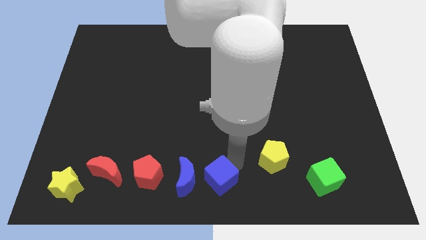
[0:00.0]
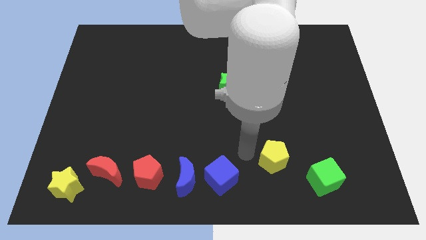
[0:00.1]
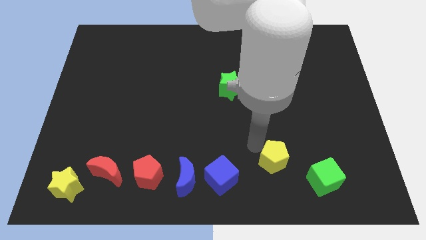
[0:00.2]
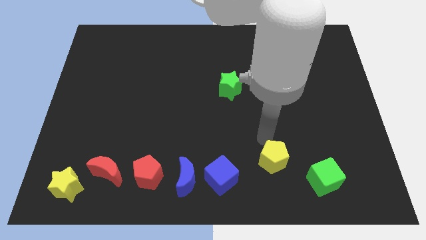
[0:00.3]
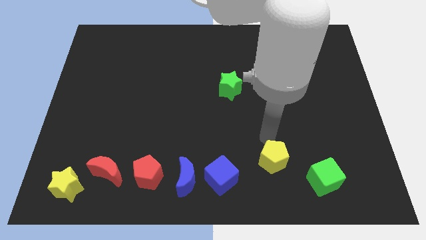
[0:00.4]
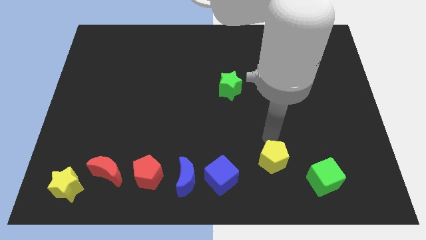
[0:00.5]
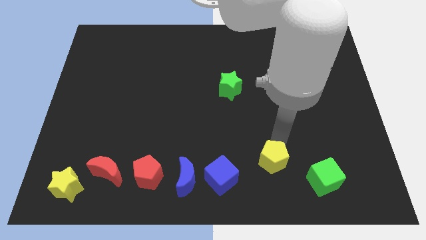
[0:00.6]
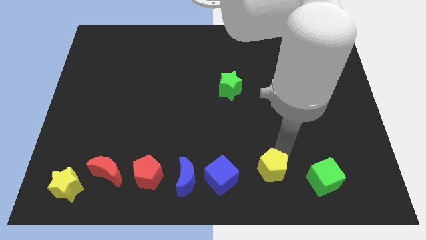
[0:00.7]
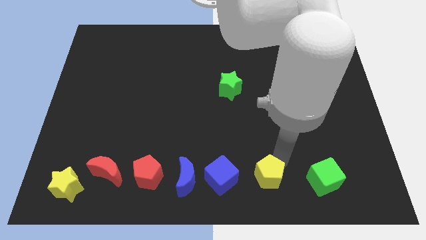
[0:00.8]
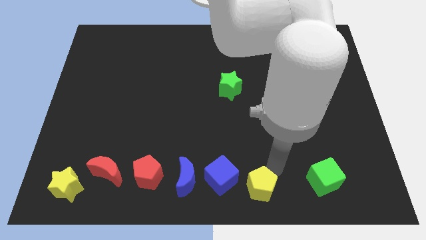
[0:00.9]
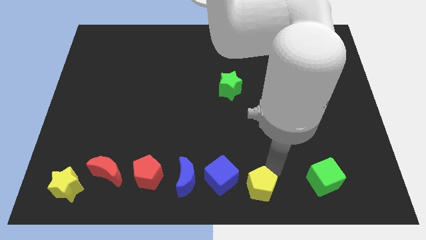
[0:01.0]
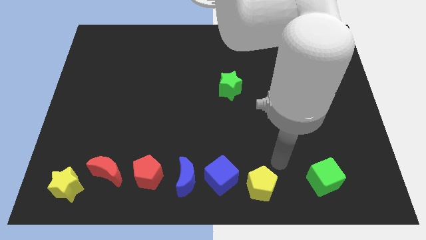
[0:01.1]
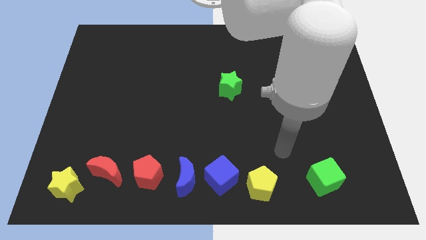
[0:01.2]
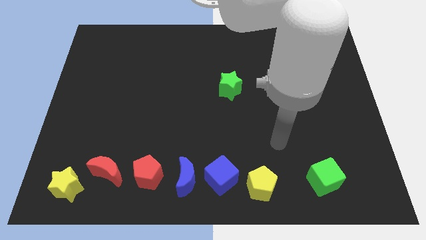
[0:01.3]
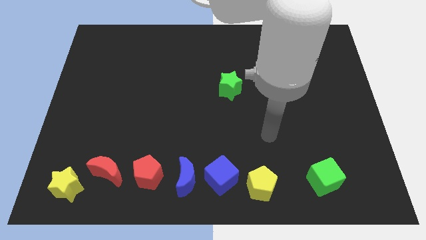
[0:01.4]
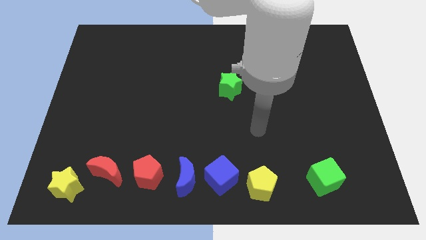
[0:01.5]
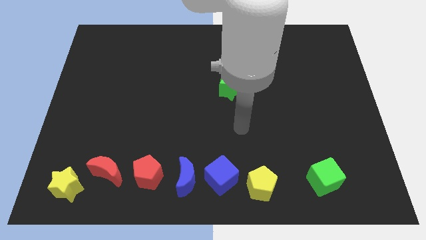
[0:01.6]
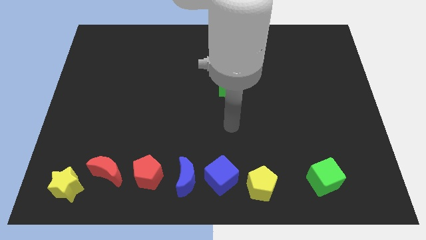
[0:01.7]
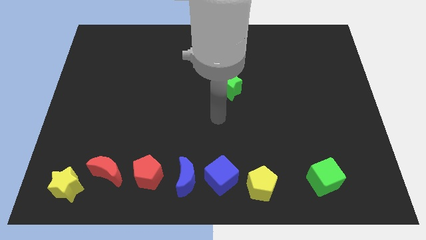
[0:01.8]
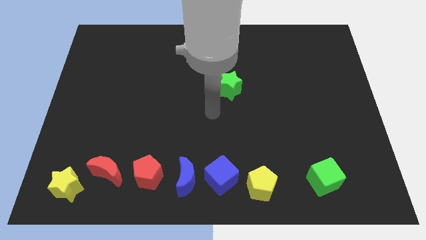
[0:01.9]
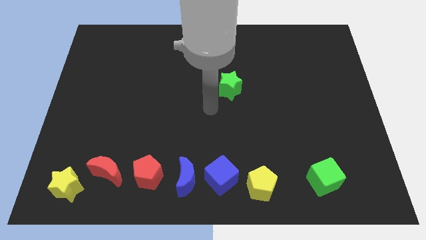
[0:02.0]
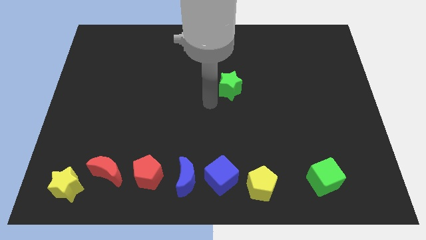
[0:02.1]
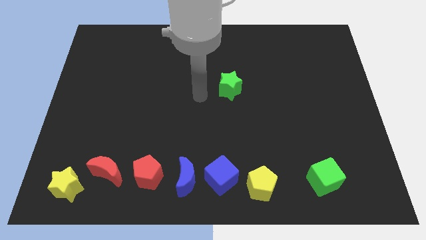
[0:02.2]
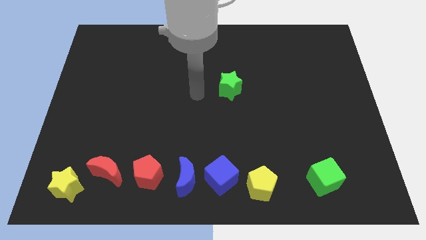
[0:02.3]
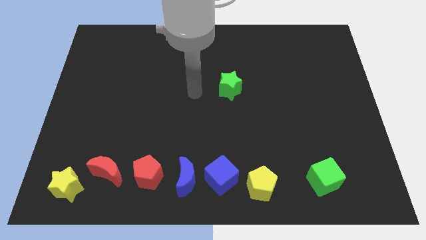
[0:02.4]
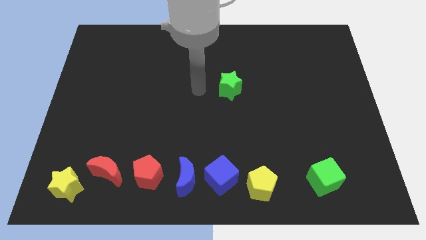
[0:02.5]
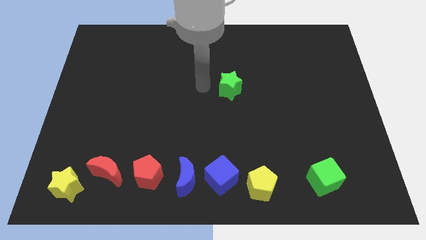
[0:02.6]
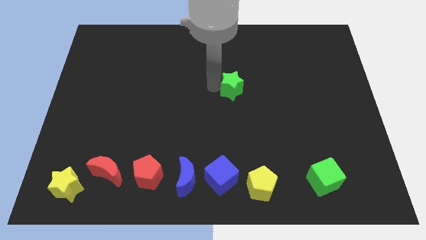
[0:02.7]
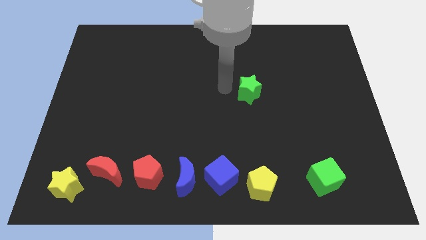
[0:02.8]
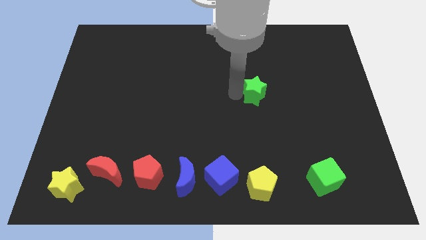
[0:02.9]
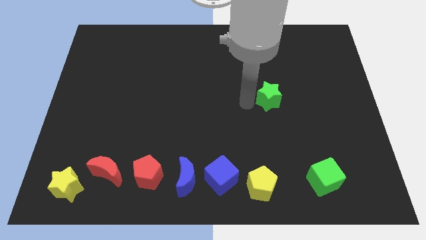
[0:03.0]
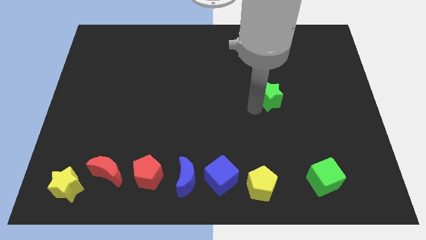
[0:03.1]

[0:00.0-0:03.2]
move yellow pentagon to the right of blue cube

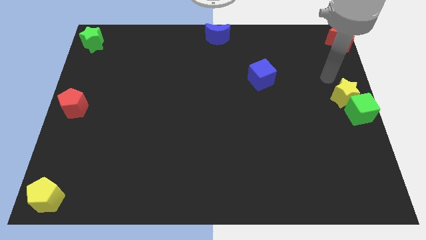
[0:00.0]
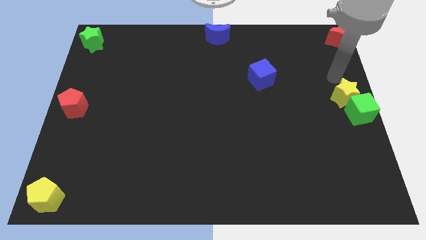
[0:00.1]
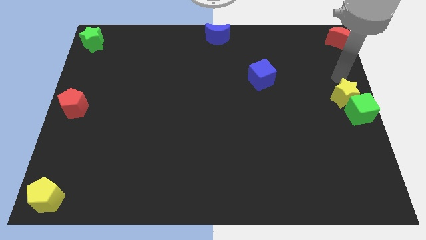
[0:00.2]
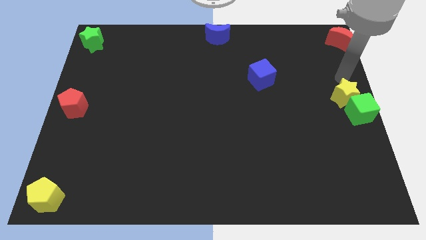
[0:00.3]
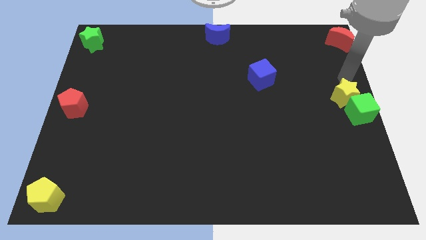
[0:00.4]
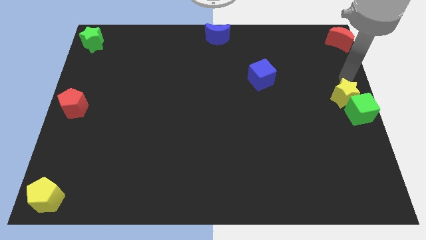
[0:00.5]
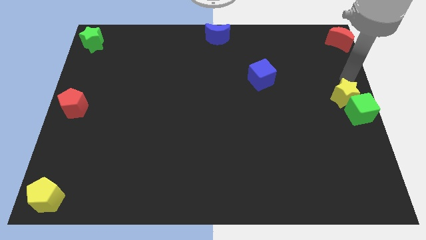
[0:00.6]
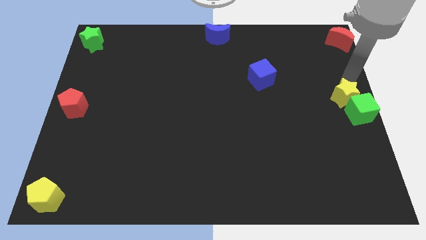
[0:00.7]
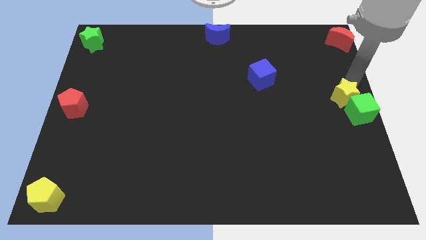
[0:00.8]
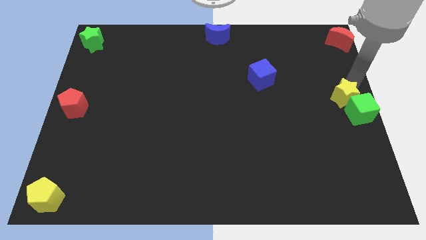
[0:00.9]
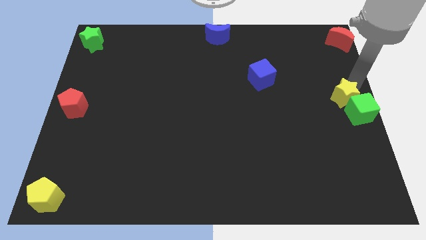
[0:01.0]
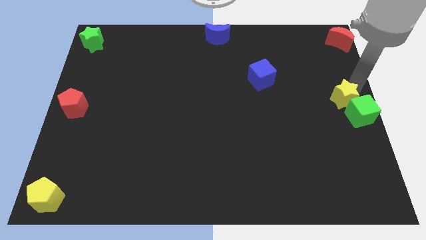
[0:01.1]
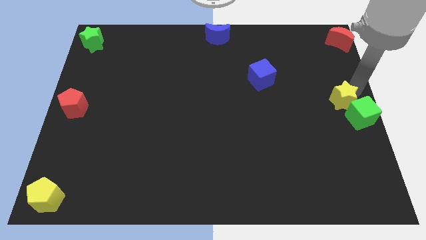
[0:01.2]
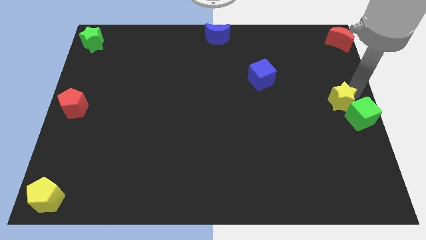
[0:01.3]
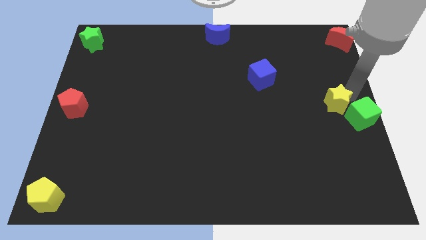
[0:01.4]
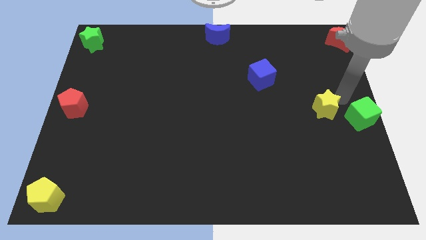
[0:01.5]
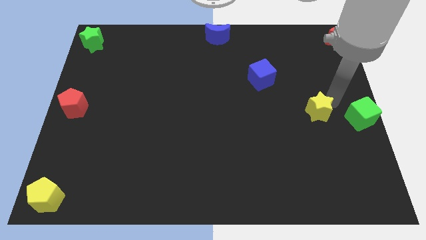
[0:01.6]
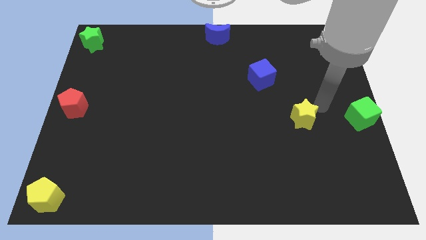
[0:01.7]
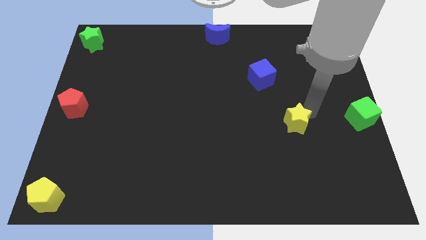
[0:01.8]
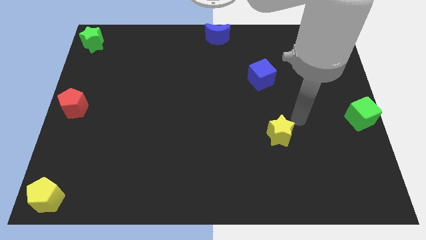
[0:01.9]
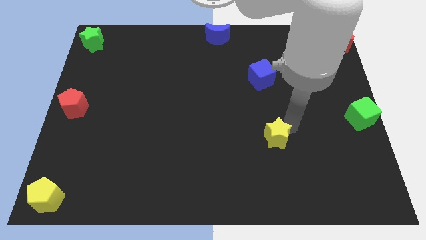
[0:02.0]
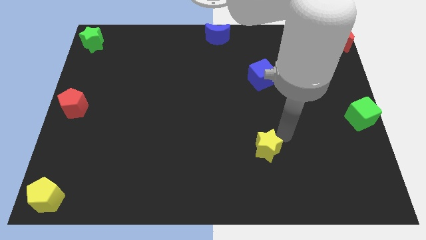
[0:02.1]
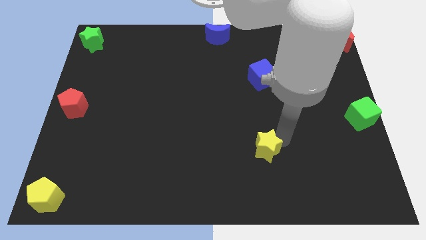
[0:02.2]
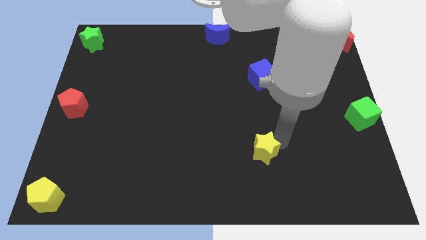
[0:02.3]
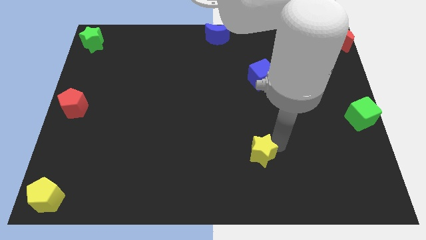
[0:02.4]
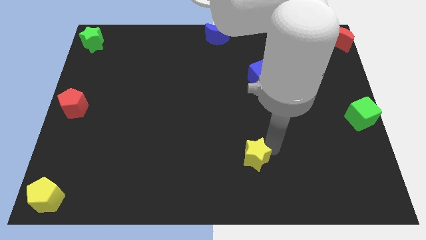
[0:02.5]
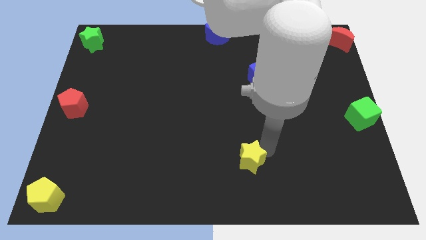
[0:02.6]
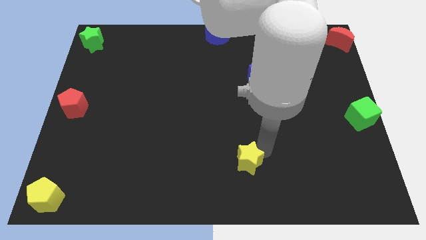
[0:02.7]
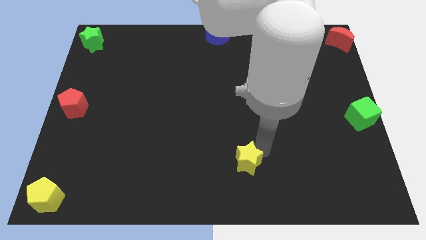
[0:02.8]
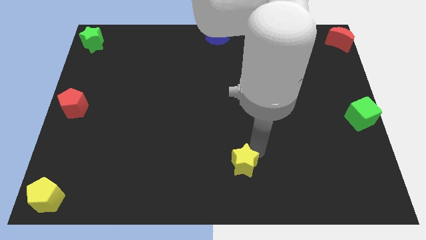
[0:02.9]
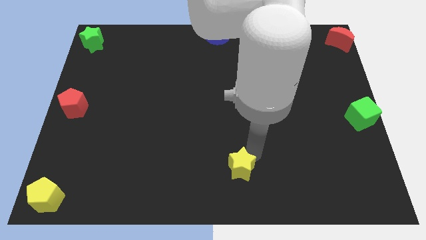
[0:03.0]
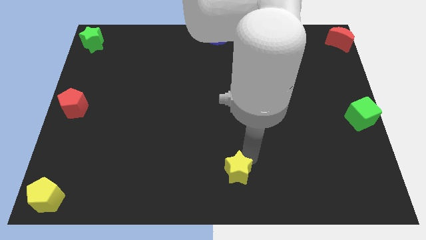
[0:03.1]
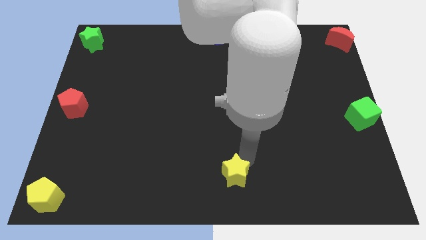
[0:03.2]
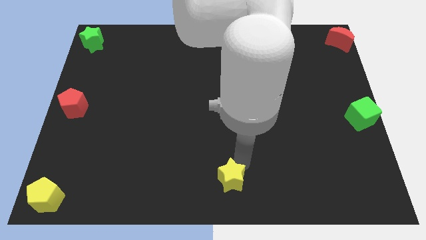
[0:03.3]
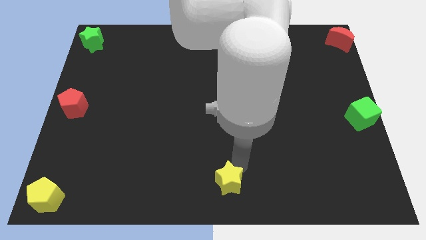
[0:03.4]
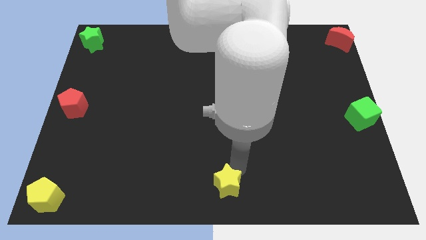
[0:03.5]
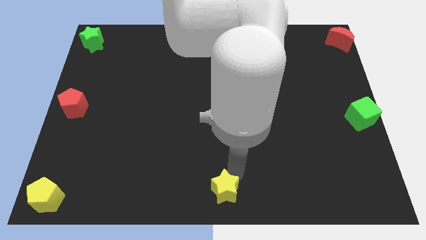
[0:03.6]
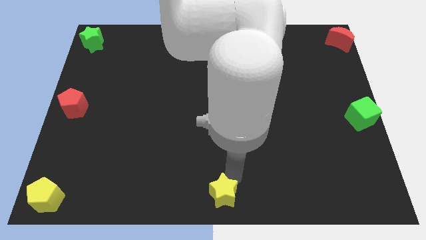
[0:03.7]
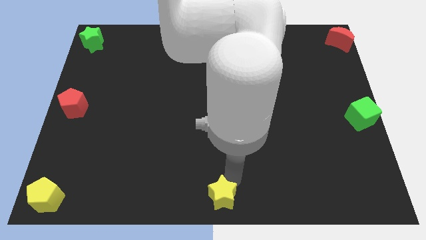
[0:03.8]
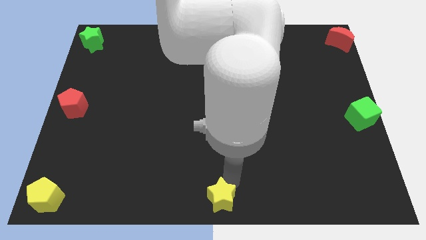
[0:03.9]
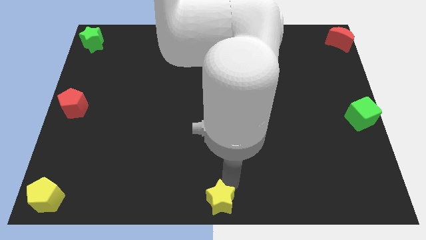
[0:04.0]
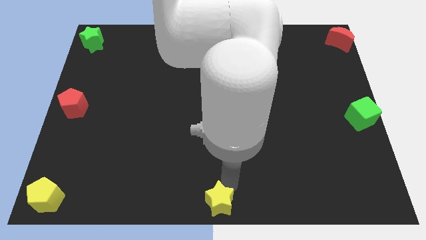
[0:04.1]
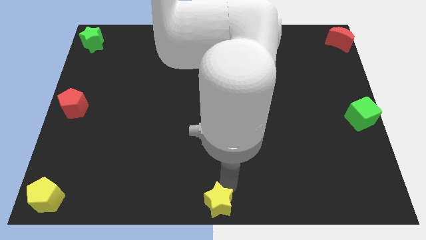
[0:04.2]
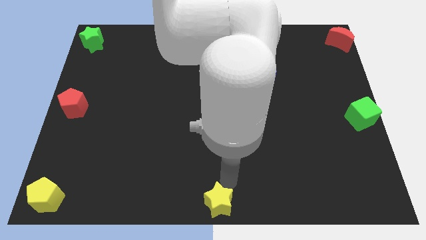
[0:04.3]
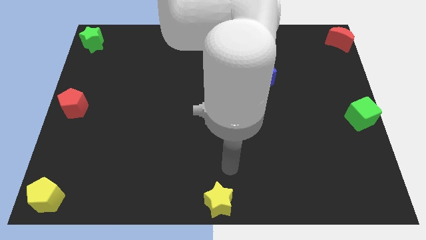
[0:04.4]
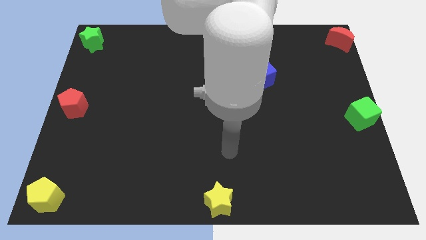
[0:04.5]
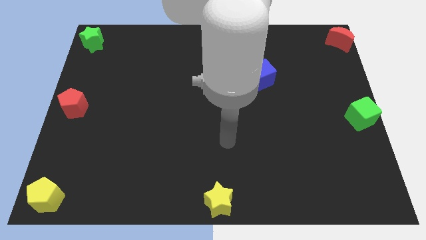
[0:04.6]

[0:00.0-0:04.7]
move the yellow star to the bottom center of the board

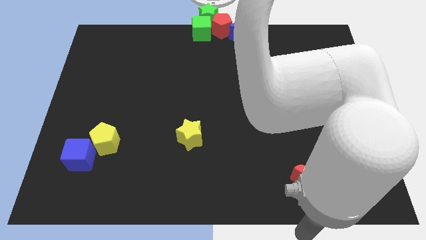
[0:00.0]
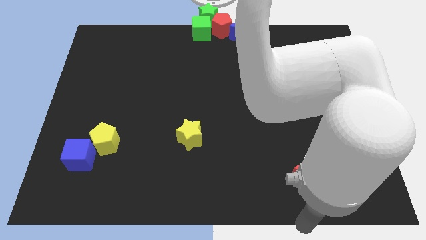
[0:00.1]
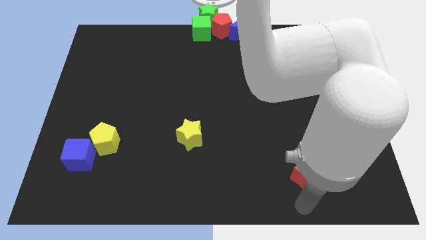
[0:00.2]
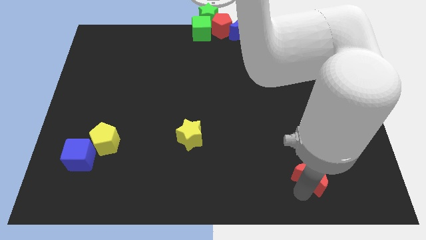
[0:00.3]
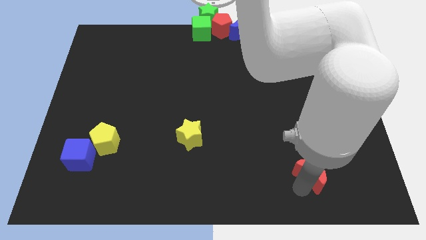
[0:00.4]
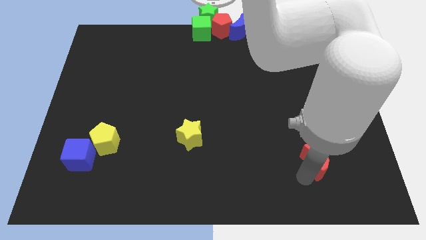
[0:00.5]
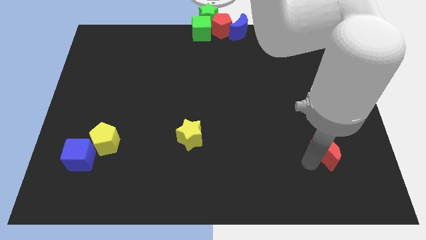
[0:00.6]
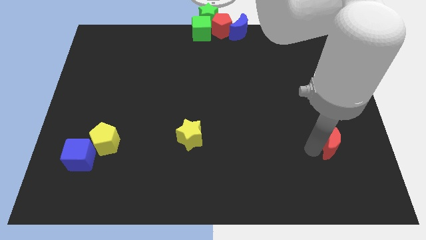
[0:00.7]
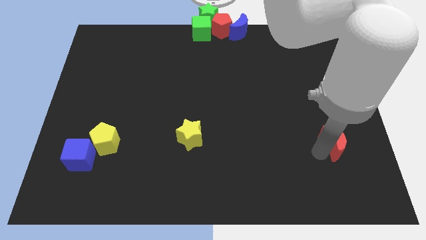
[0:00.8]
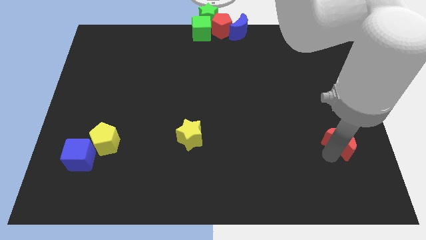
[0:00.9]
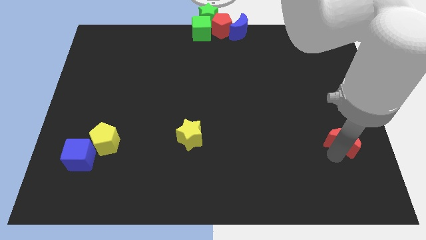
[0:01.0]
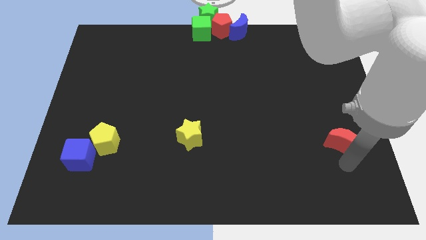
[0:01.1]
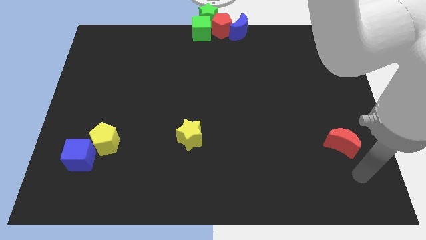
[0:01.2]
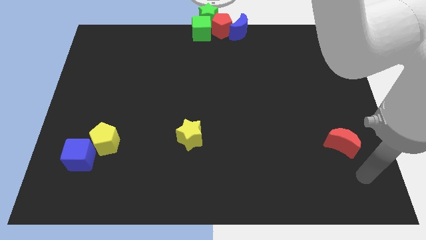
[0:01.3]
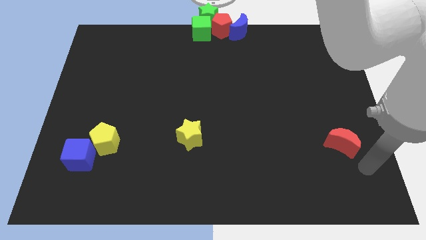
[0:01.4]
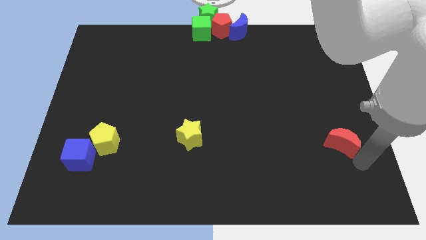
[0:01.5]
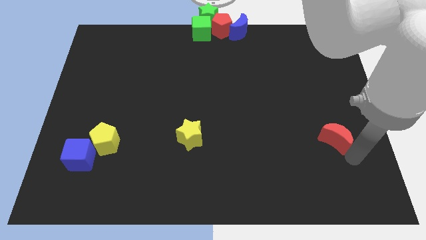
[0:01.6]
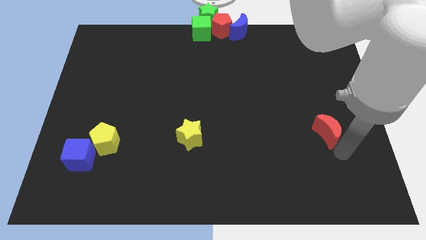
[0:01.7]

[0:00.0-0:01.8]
move the red crescent to the right of the yellow star
